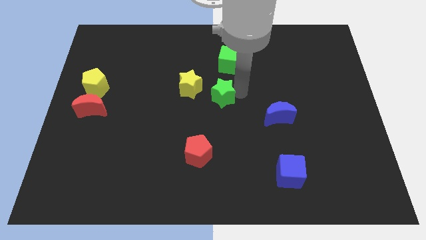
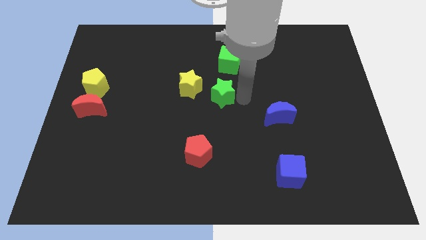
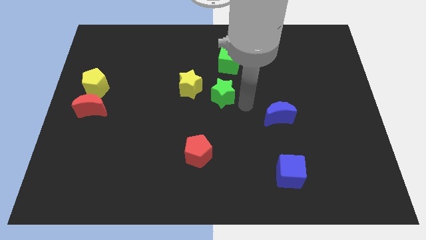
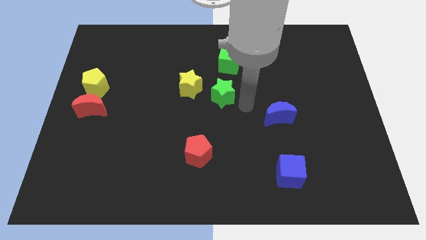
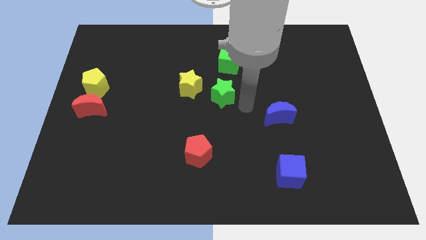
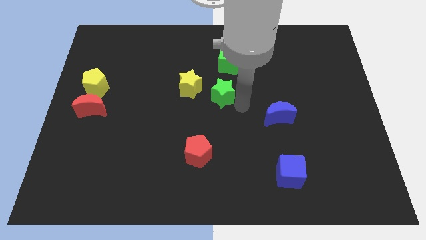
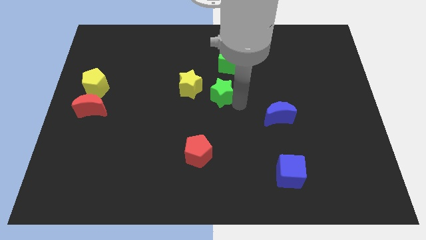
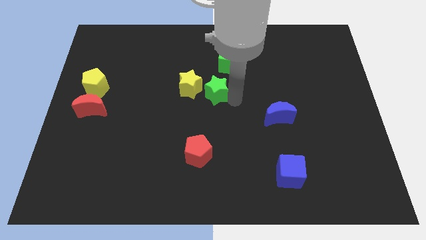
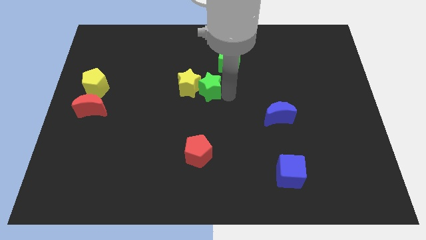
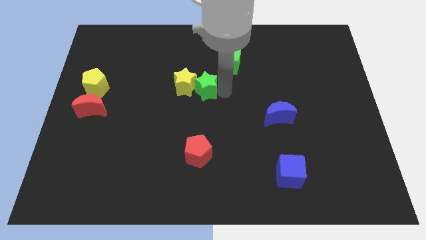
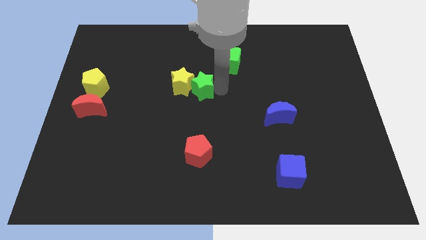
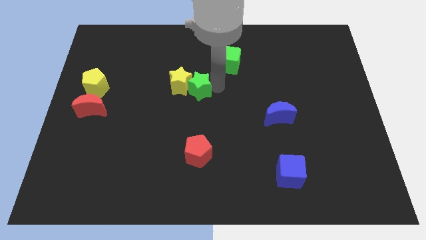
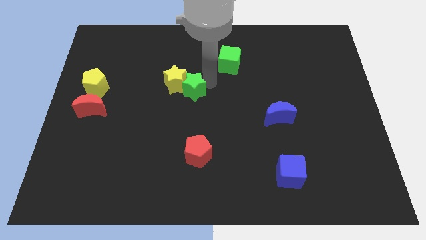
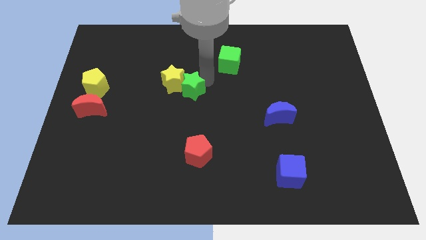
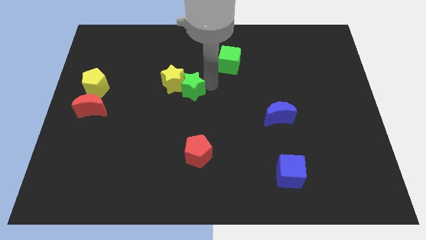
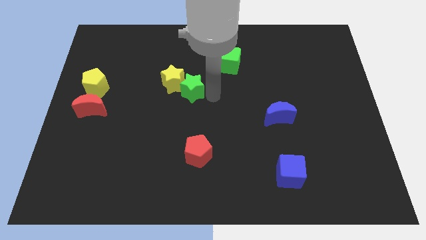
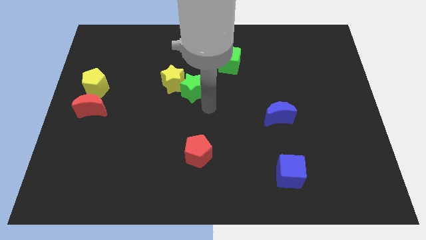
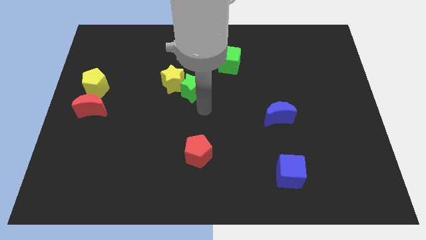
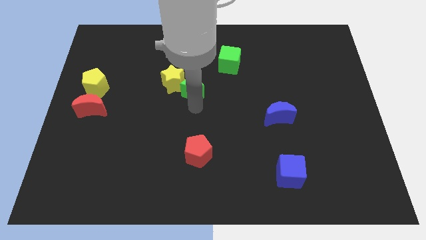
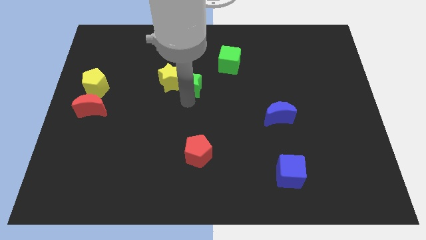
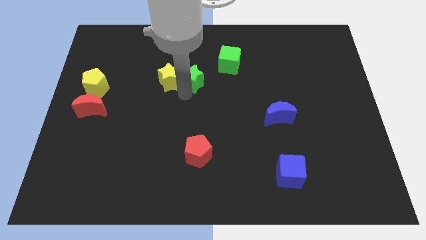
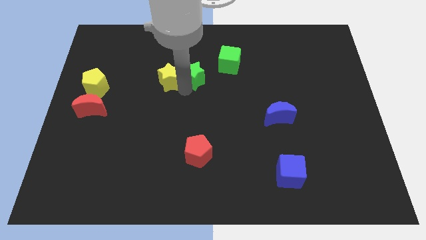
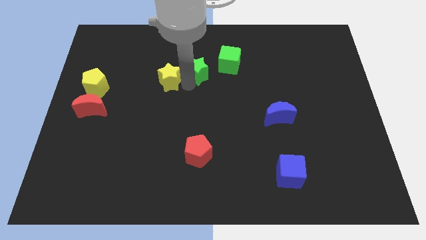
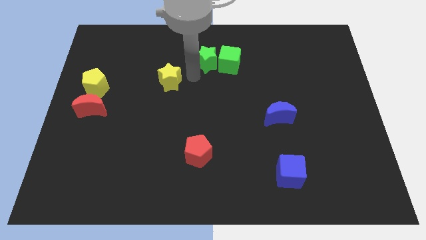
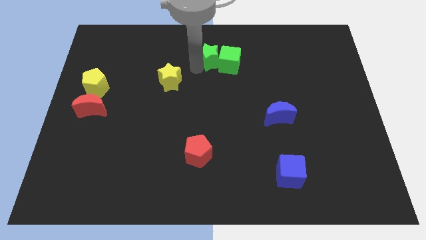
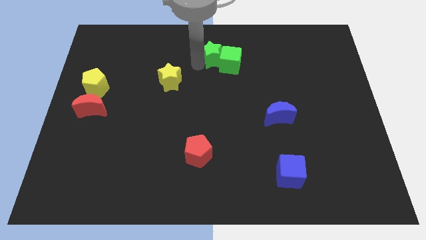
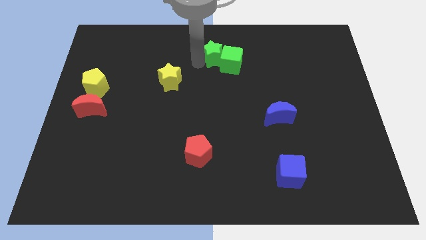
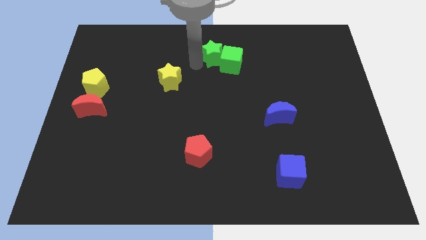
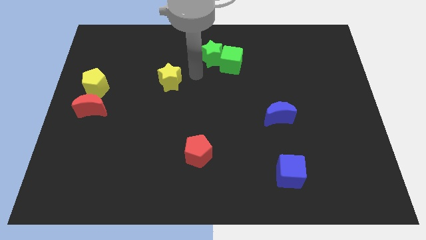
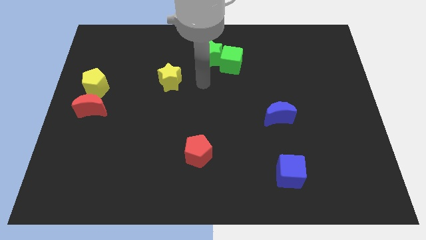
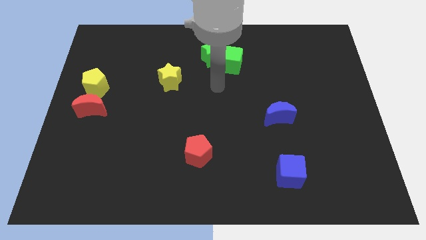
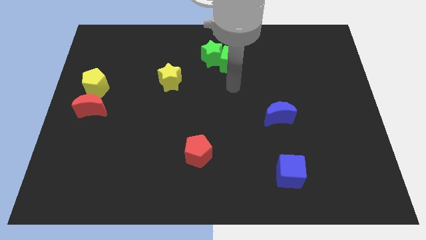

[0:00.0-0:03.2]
push green star on left side of green cube

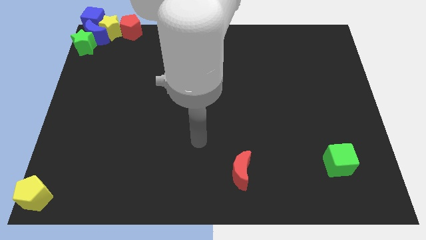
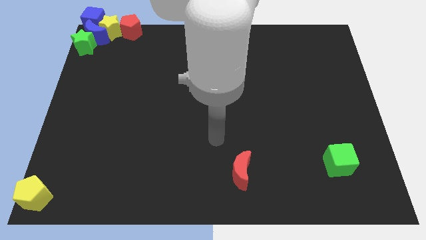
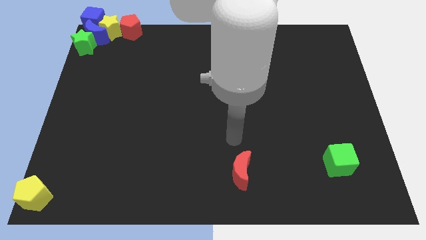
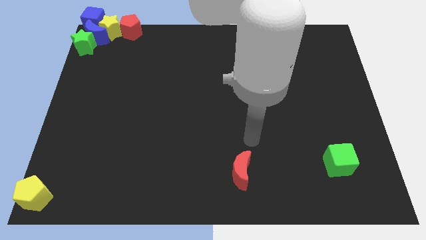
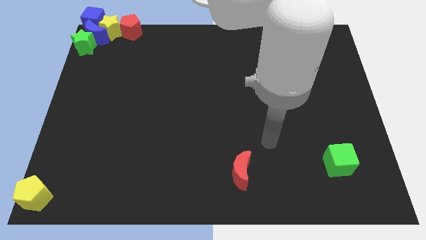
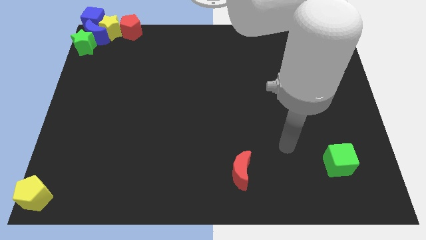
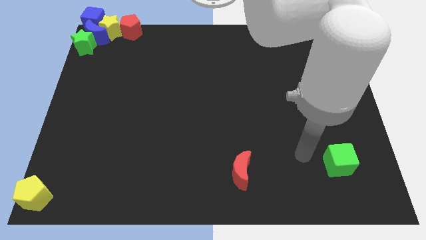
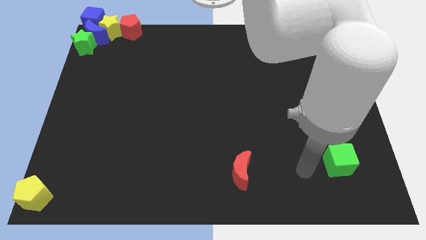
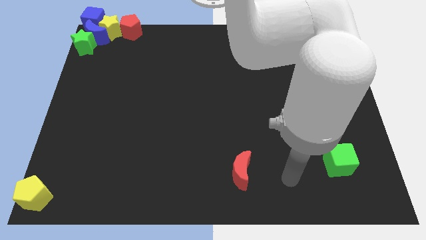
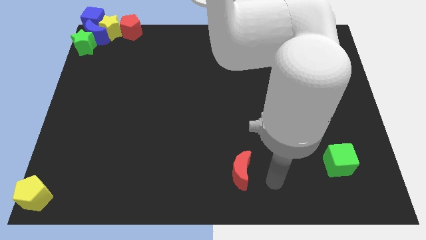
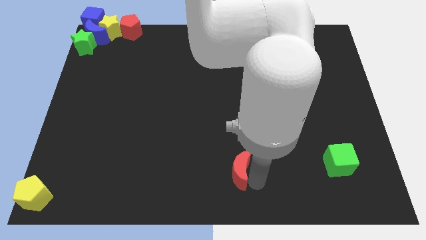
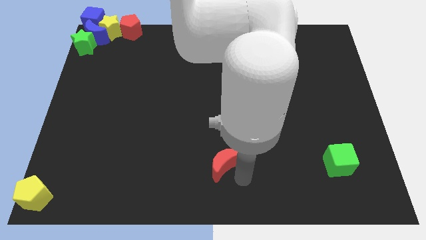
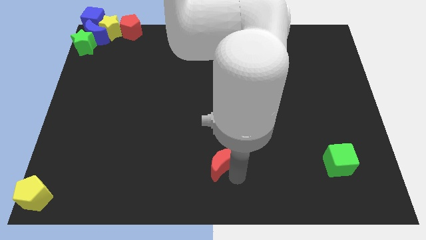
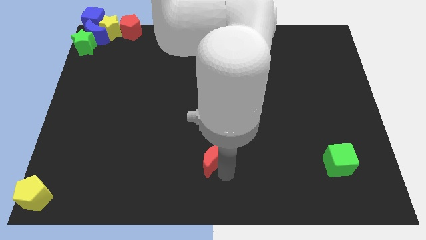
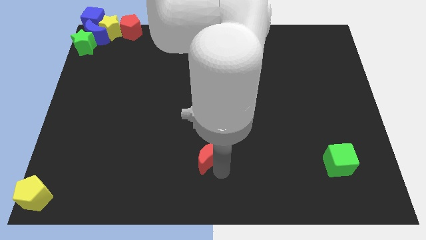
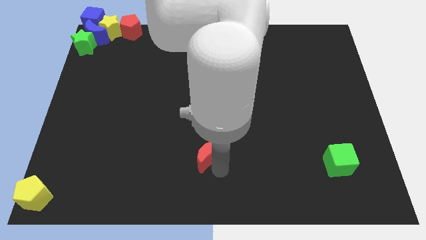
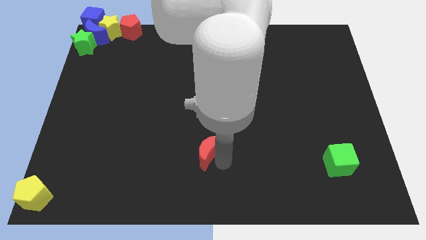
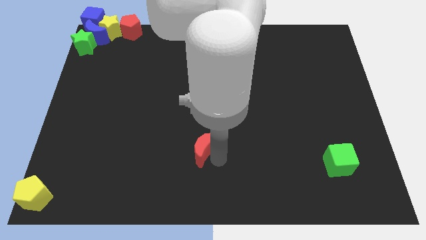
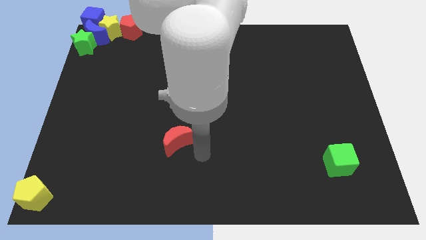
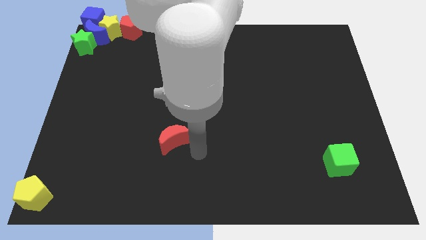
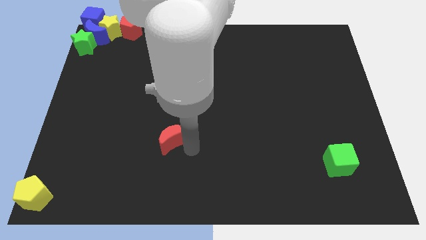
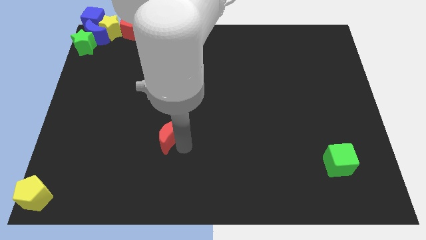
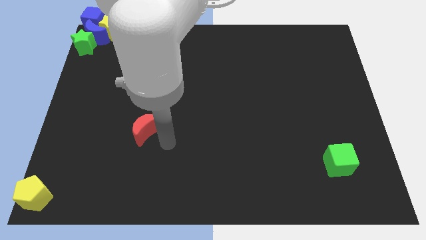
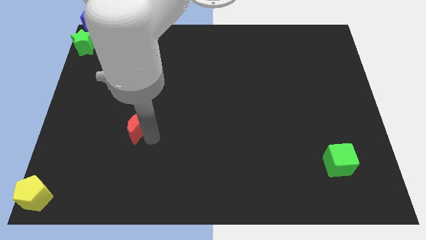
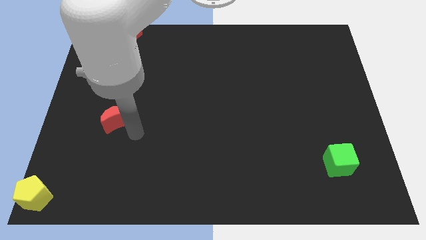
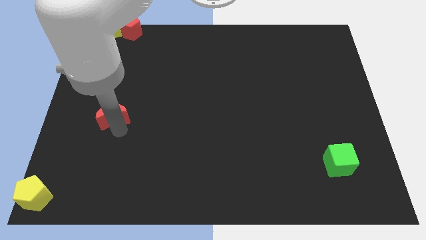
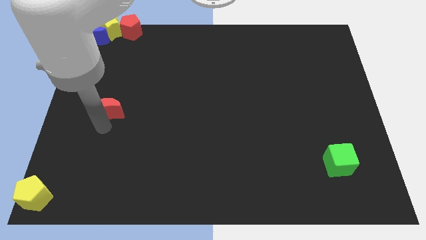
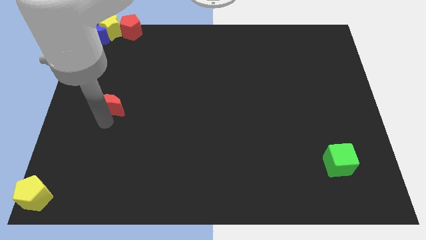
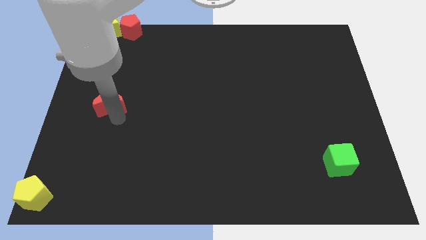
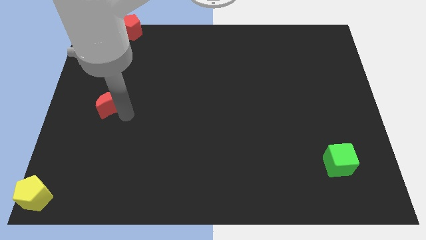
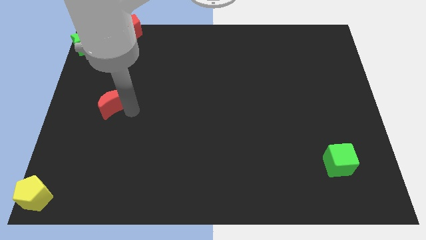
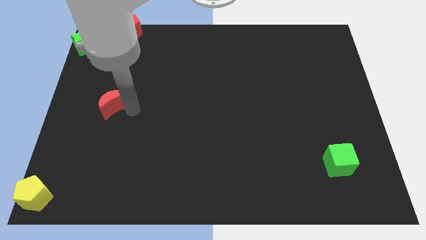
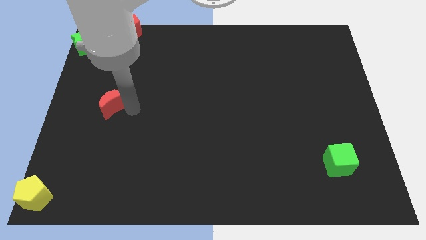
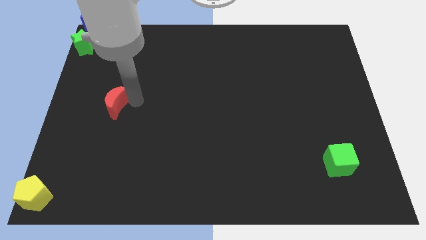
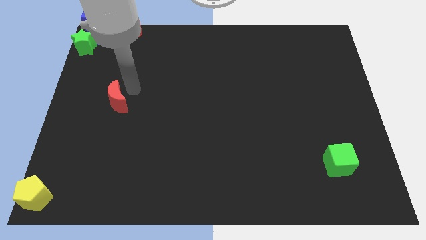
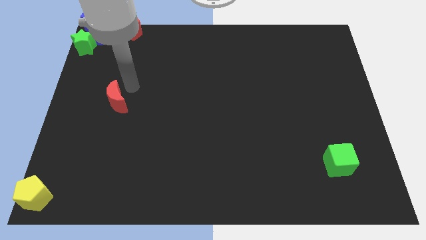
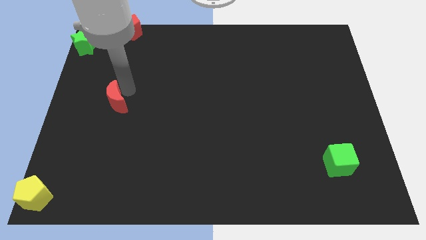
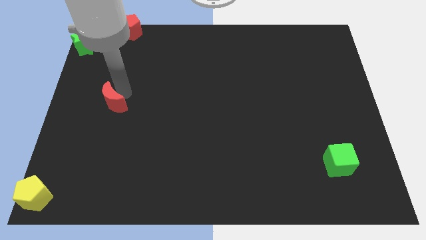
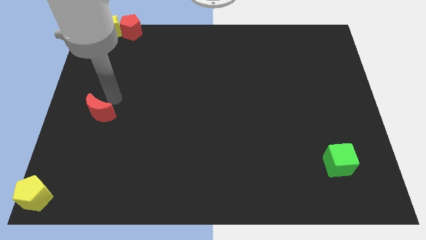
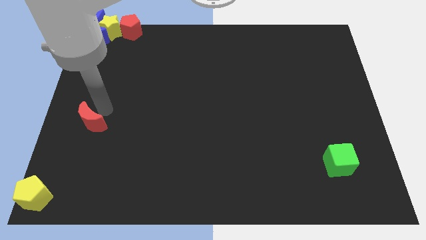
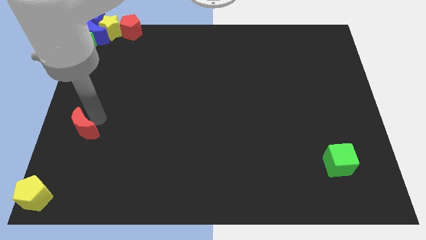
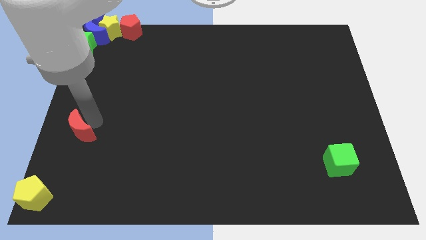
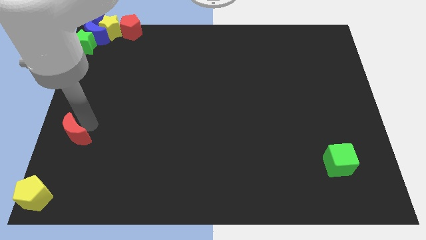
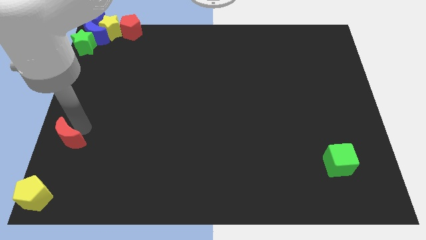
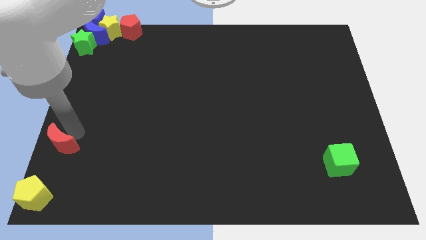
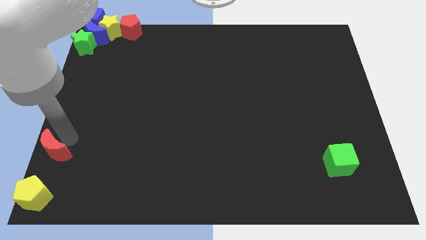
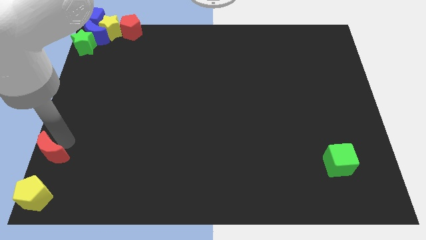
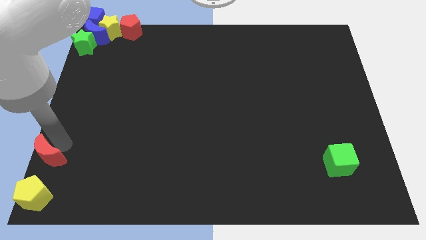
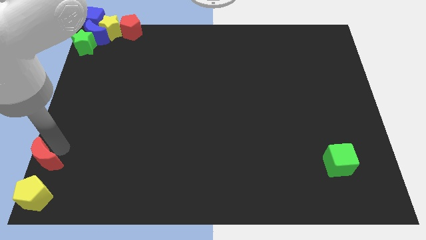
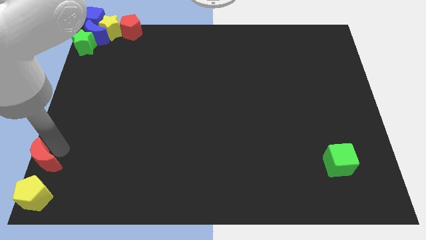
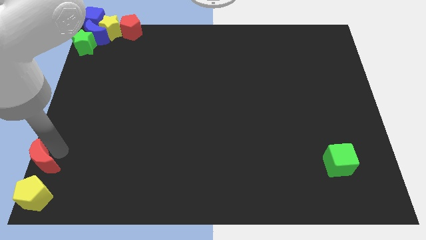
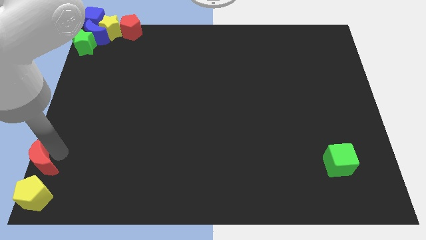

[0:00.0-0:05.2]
push the red crescent to the top of the yellow pentagon

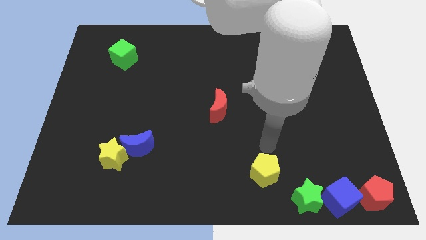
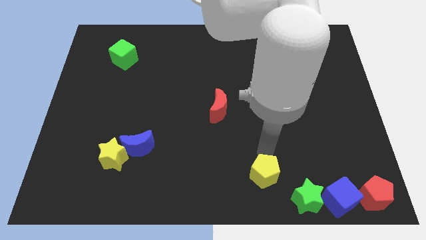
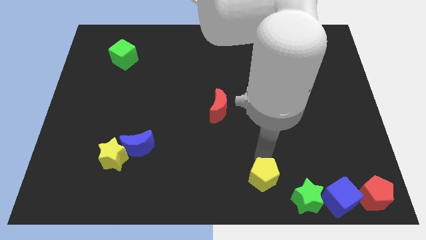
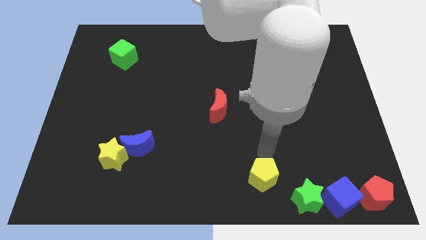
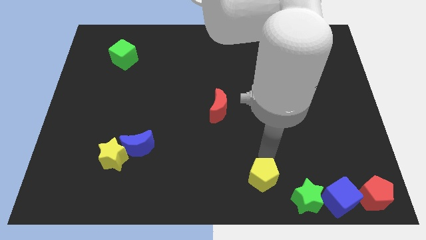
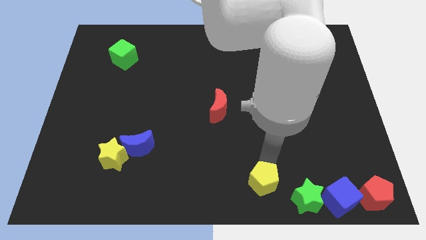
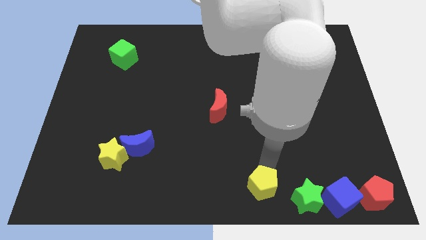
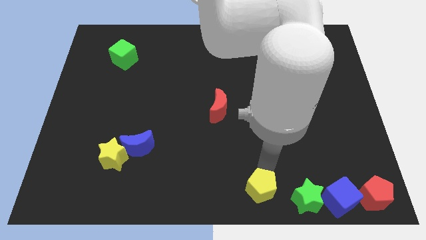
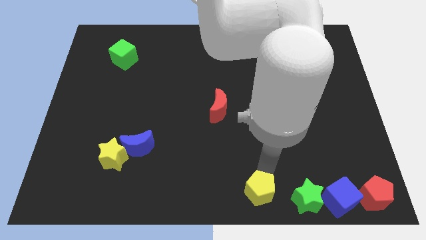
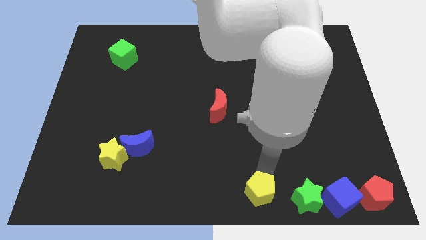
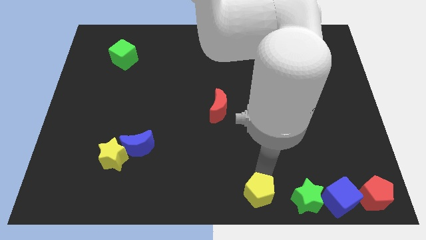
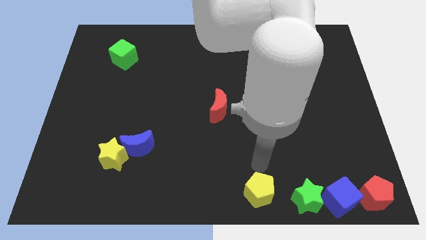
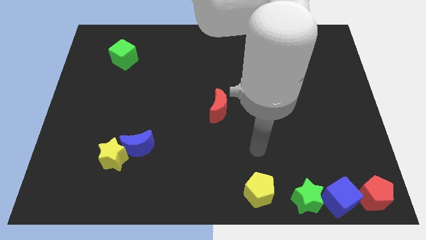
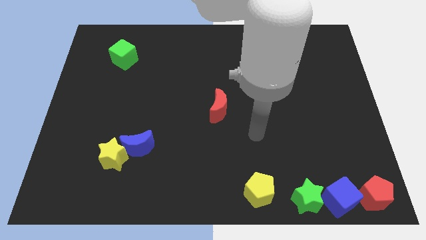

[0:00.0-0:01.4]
place the yellow pentagon to the left side of the green star
